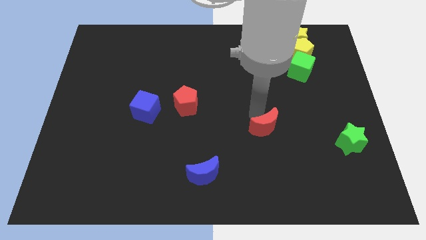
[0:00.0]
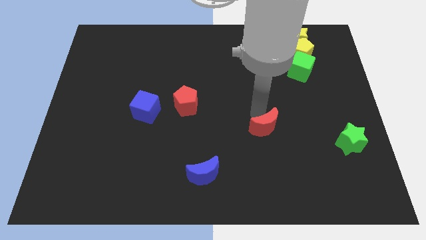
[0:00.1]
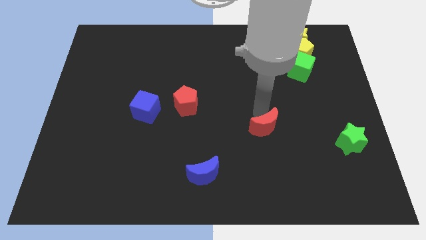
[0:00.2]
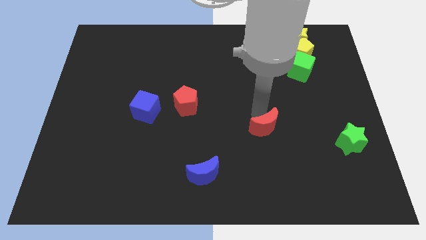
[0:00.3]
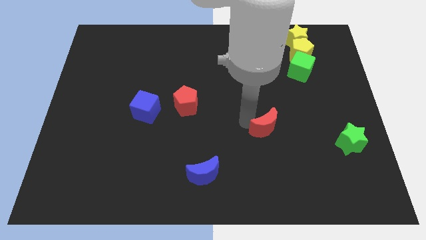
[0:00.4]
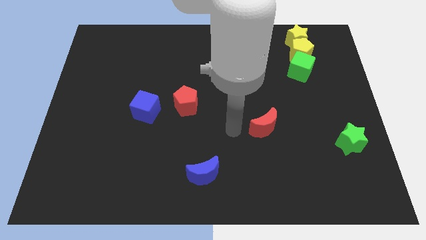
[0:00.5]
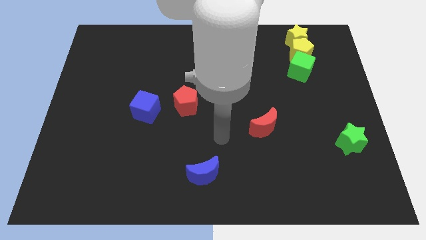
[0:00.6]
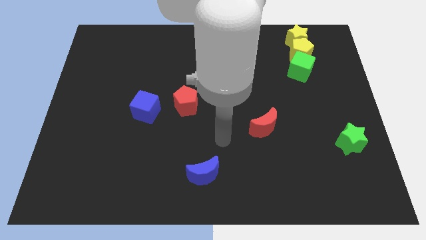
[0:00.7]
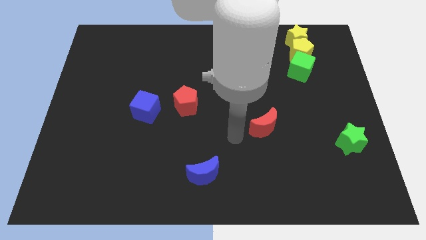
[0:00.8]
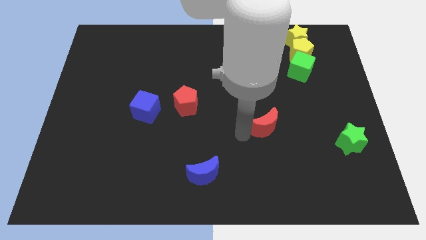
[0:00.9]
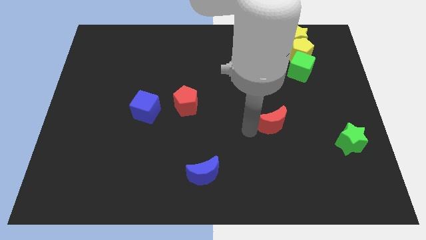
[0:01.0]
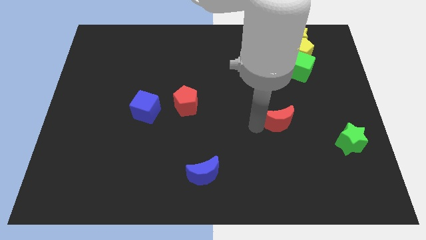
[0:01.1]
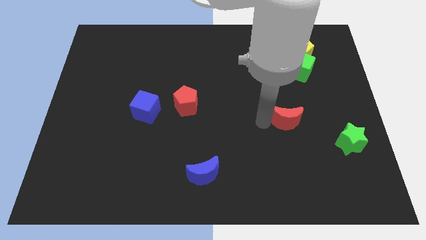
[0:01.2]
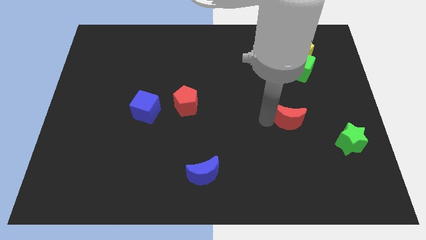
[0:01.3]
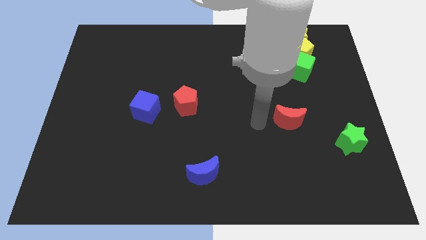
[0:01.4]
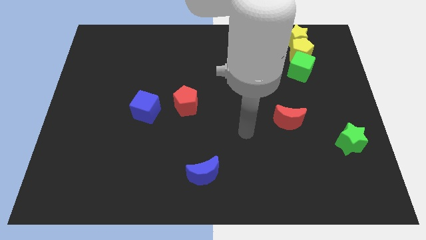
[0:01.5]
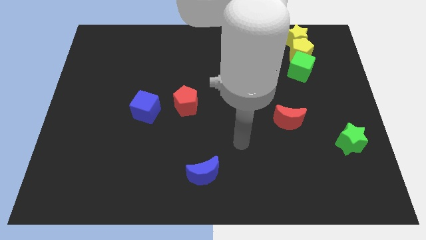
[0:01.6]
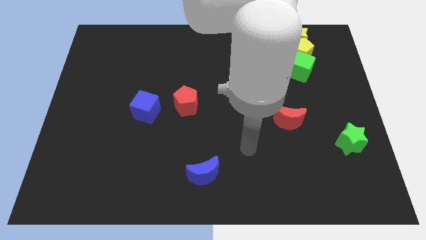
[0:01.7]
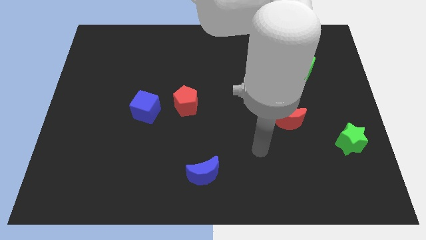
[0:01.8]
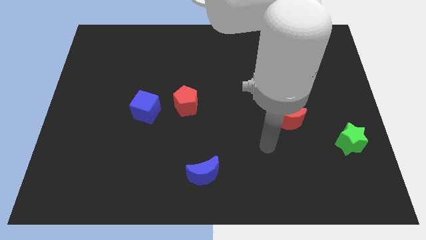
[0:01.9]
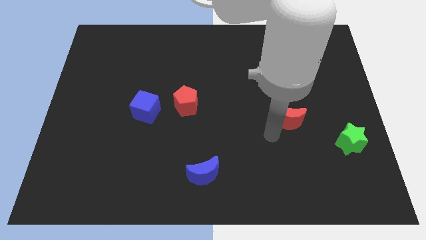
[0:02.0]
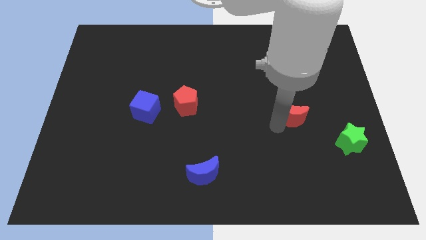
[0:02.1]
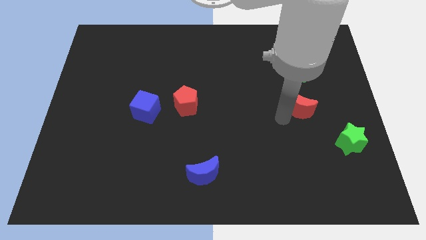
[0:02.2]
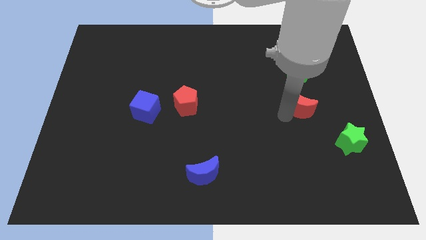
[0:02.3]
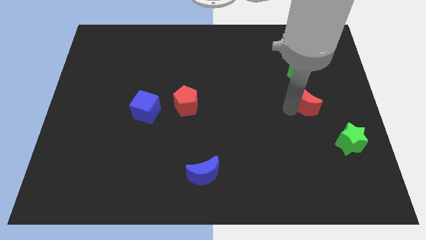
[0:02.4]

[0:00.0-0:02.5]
push the red moon towards the green cube

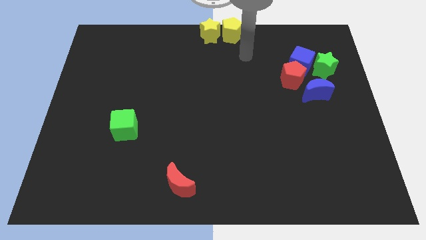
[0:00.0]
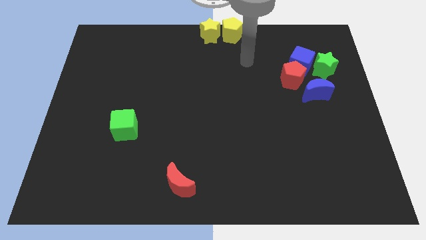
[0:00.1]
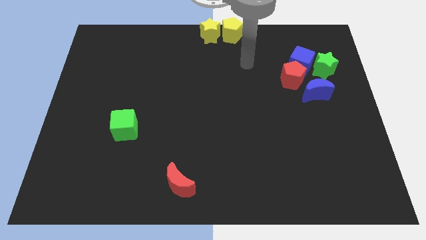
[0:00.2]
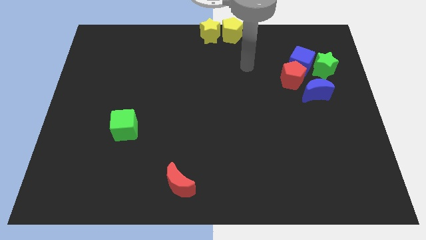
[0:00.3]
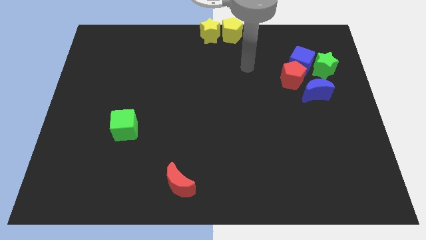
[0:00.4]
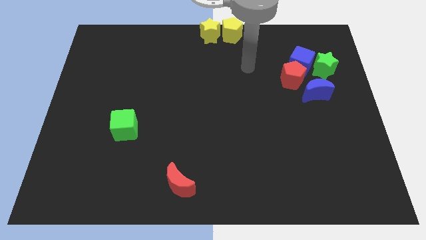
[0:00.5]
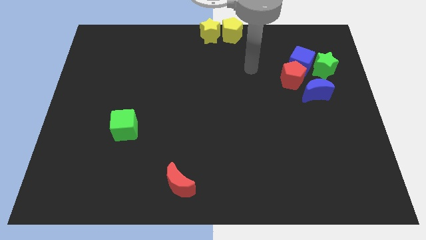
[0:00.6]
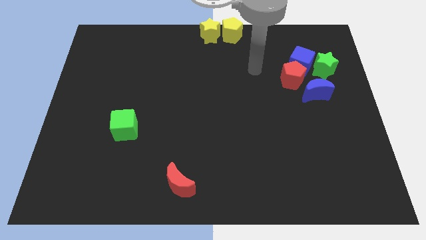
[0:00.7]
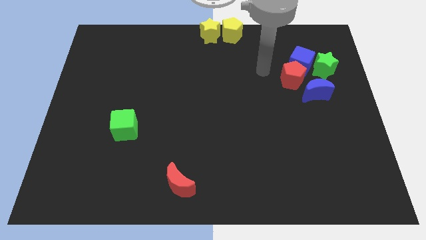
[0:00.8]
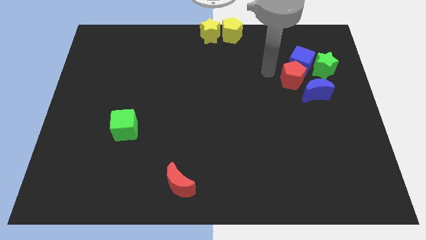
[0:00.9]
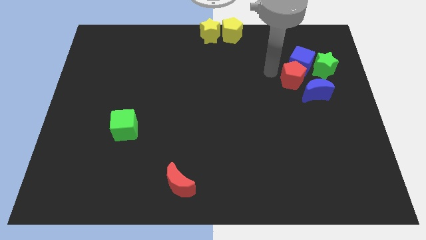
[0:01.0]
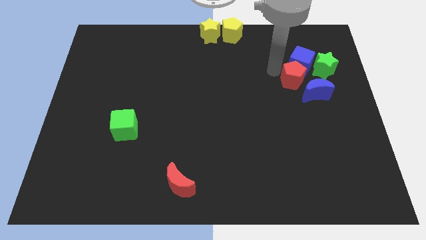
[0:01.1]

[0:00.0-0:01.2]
place your arm at the top left side of red pentagon

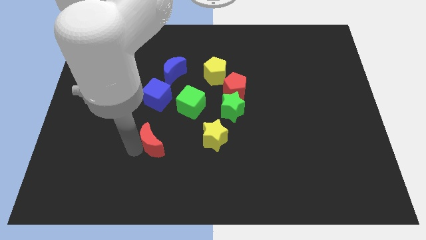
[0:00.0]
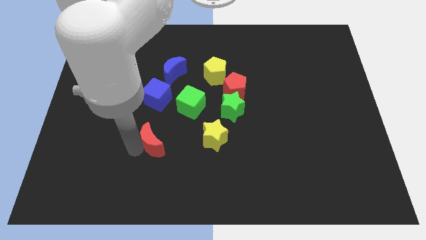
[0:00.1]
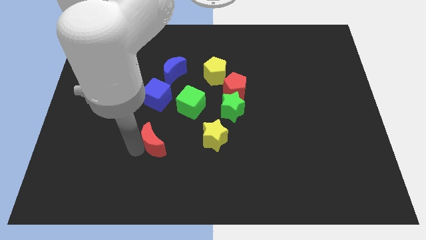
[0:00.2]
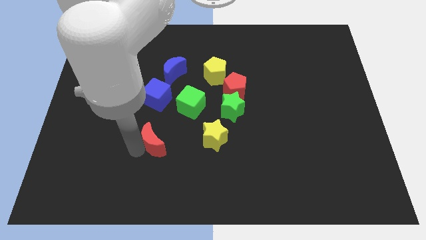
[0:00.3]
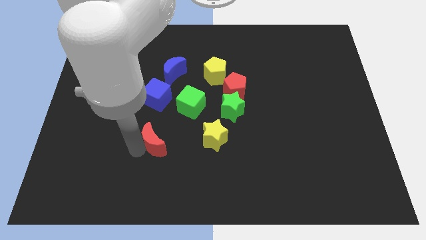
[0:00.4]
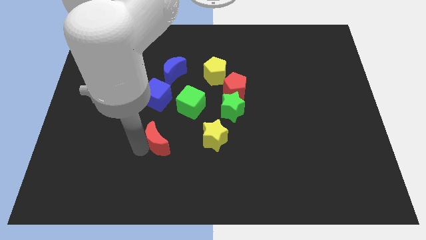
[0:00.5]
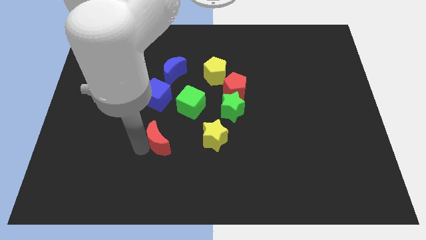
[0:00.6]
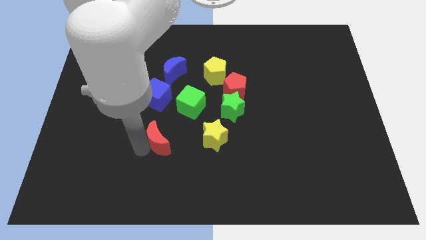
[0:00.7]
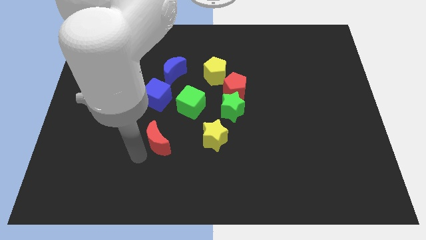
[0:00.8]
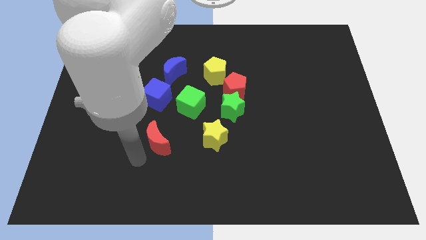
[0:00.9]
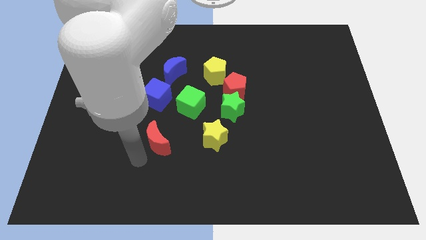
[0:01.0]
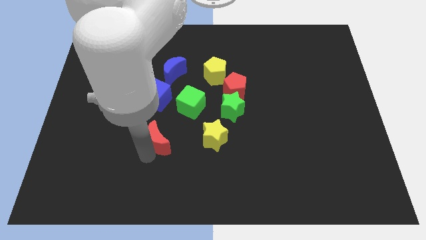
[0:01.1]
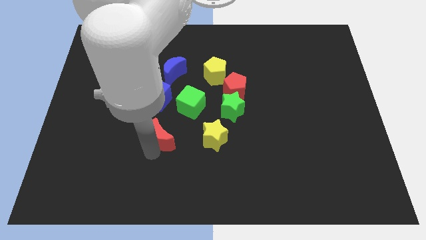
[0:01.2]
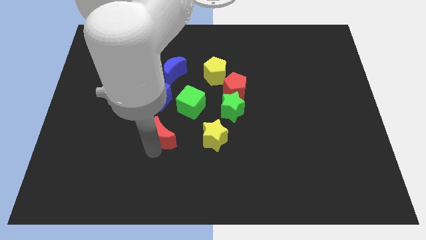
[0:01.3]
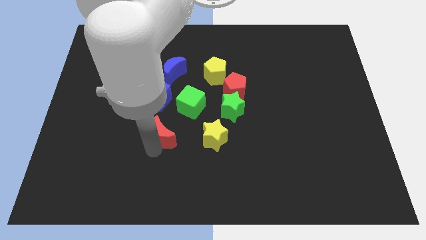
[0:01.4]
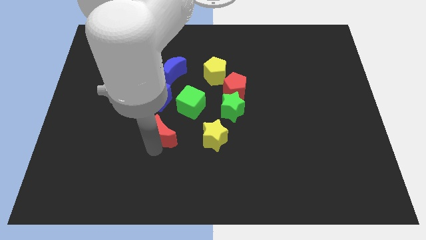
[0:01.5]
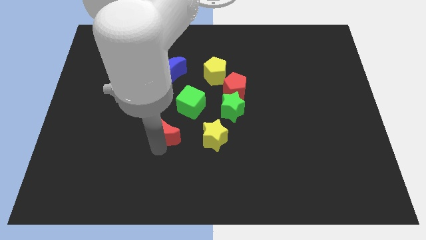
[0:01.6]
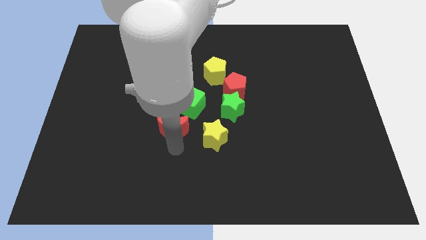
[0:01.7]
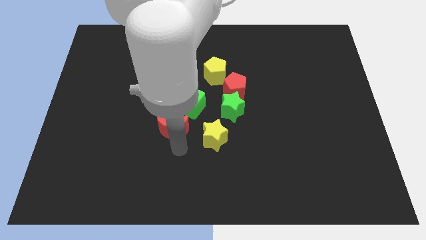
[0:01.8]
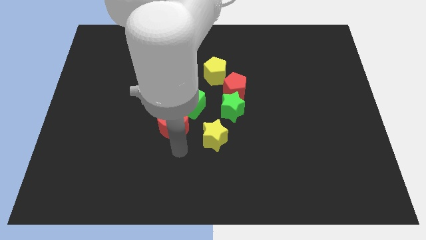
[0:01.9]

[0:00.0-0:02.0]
slide the red moon close to the green cube

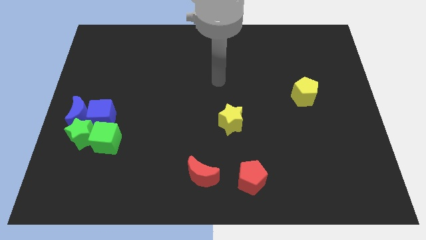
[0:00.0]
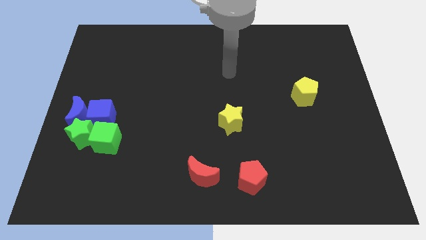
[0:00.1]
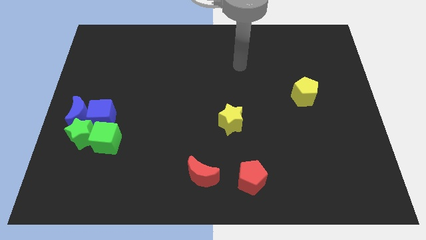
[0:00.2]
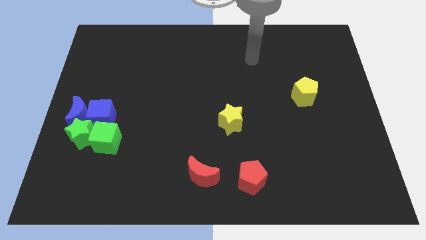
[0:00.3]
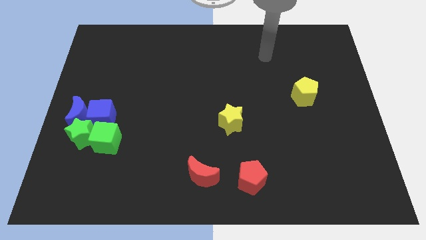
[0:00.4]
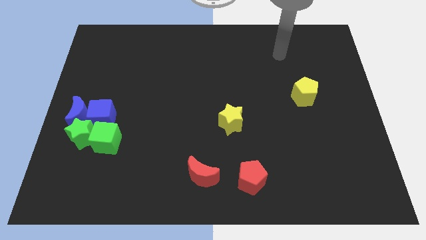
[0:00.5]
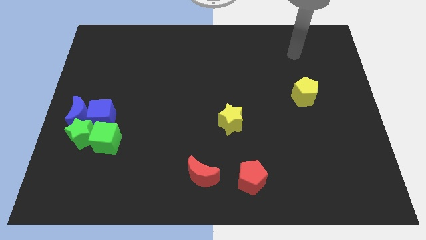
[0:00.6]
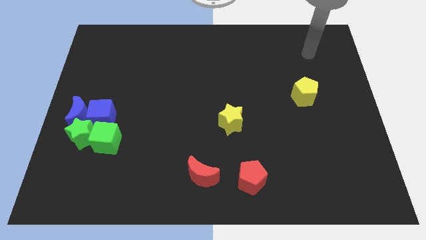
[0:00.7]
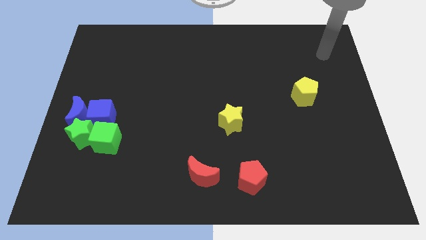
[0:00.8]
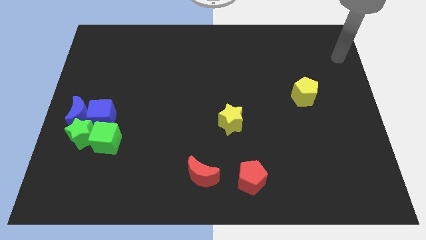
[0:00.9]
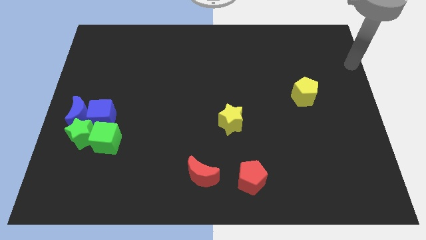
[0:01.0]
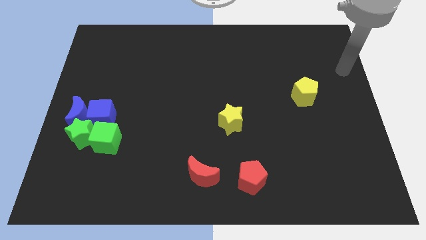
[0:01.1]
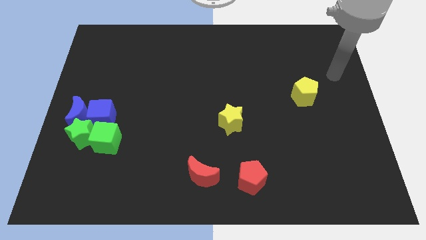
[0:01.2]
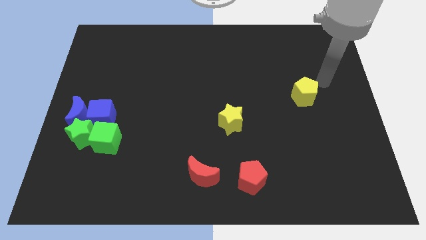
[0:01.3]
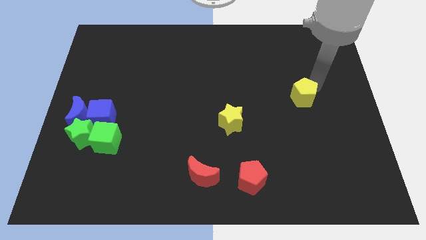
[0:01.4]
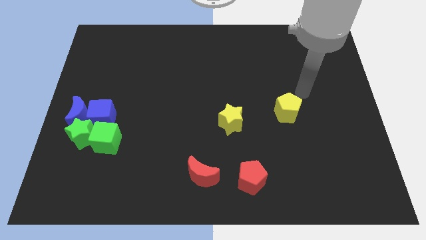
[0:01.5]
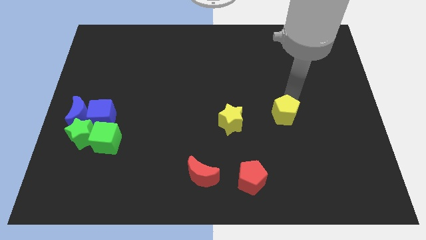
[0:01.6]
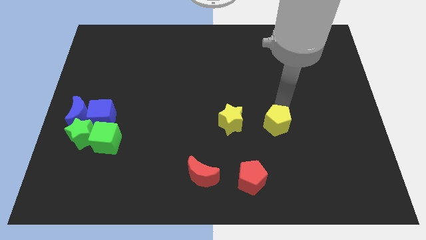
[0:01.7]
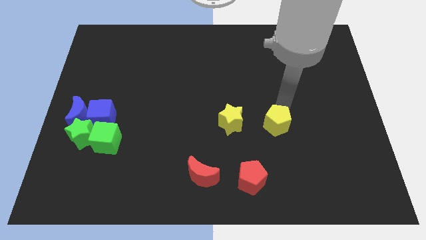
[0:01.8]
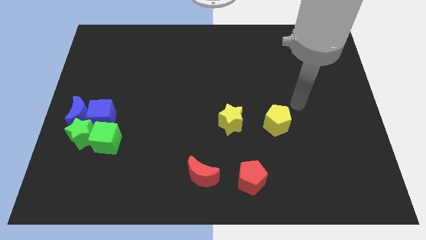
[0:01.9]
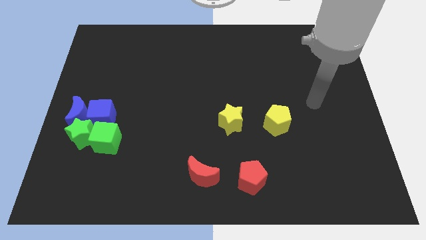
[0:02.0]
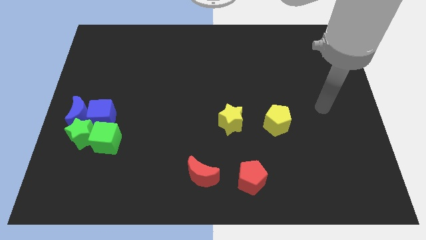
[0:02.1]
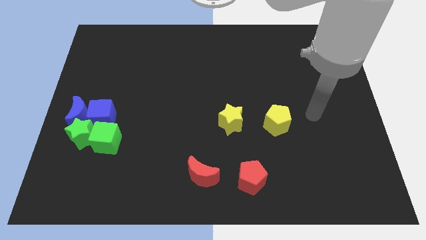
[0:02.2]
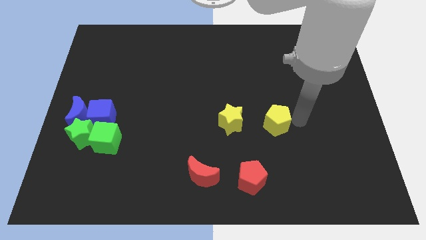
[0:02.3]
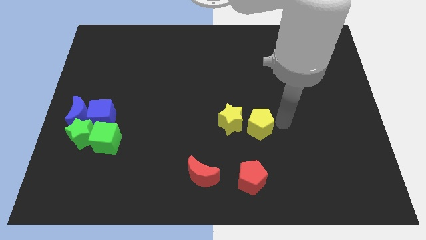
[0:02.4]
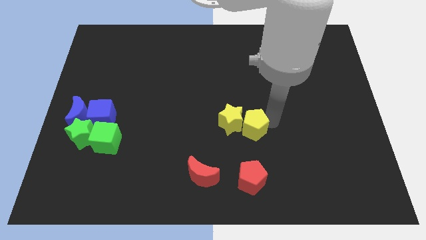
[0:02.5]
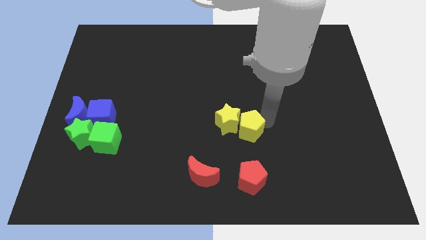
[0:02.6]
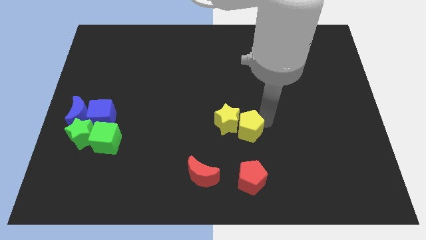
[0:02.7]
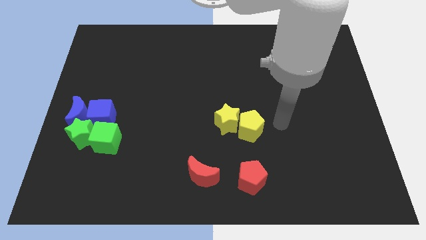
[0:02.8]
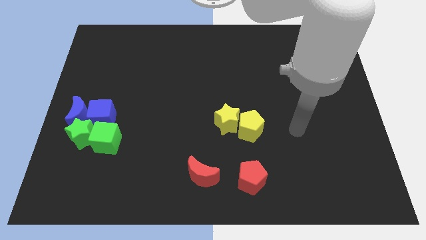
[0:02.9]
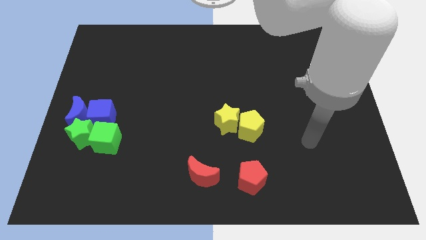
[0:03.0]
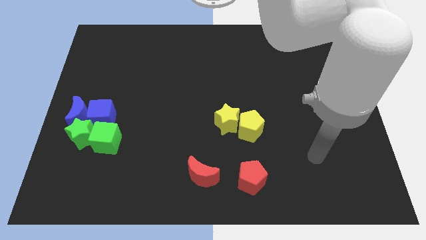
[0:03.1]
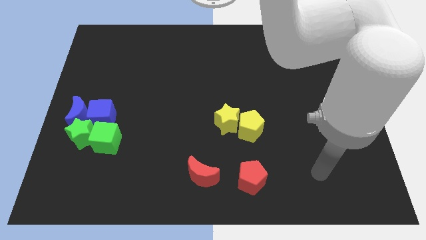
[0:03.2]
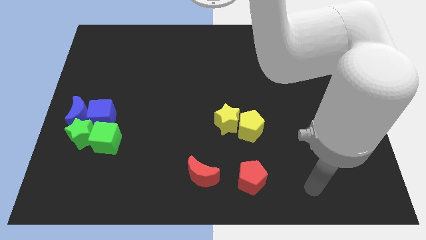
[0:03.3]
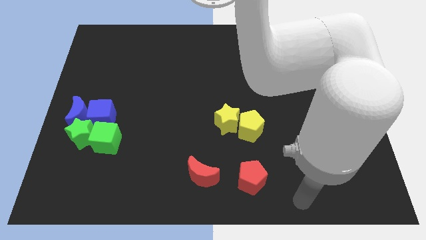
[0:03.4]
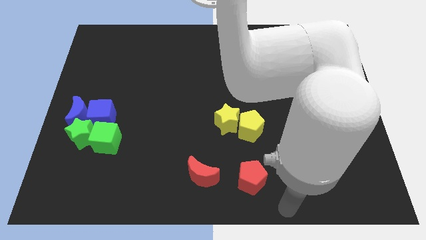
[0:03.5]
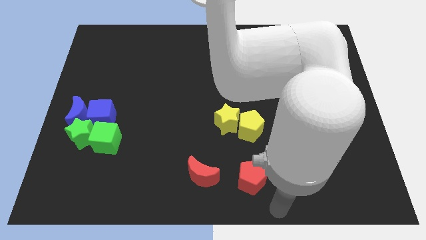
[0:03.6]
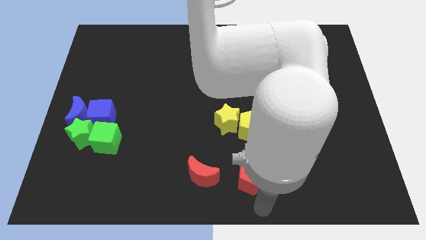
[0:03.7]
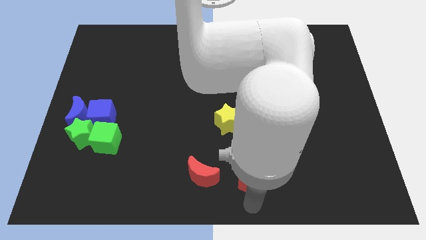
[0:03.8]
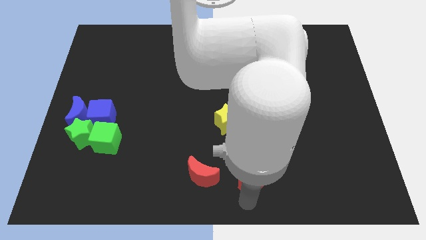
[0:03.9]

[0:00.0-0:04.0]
place the yellow pentagon to the right of the yellow star
